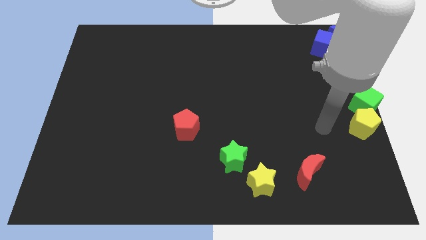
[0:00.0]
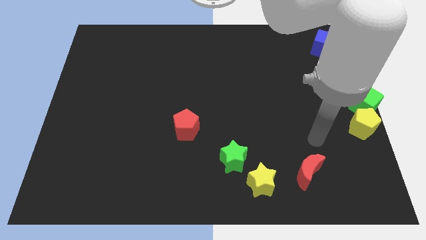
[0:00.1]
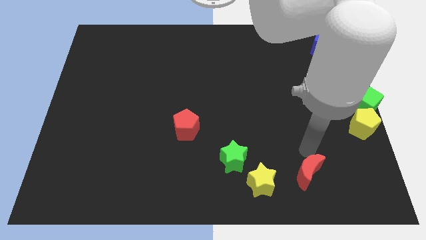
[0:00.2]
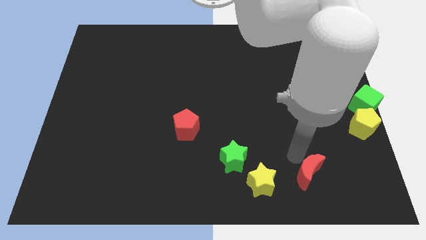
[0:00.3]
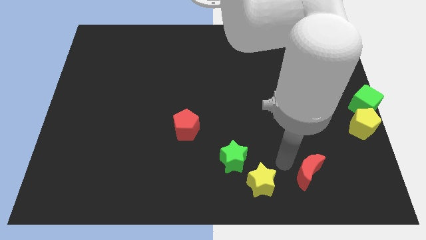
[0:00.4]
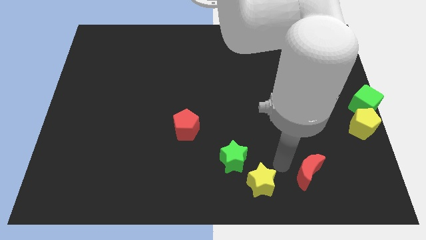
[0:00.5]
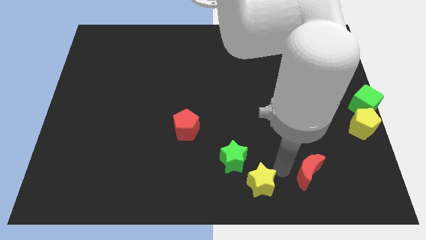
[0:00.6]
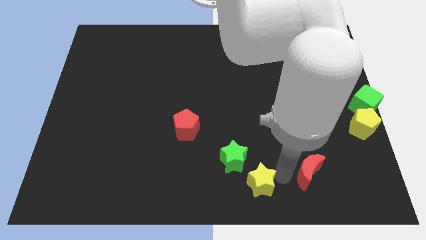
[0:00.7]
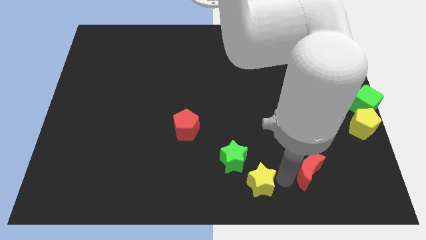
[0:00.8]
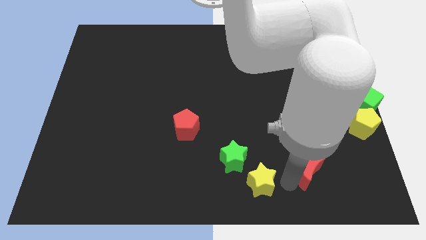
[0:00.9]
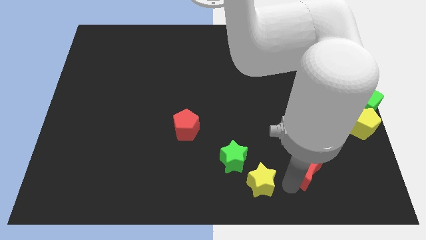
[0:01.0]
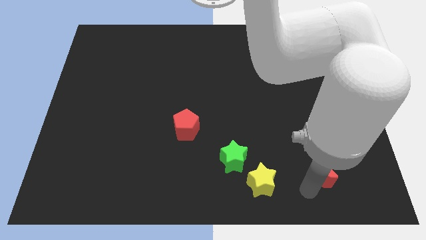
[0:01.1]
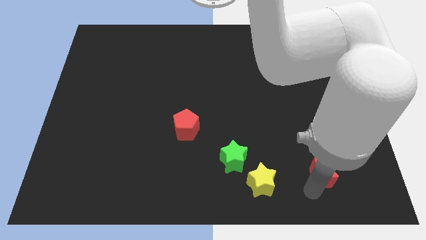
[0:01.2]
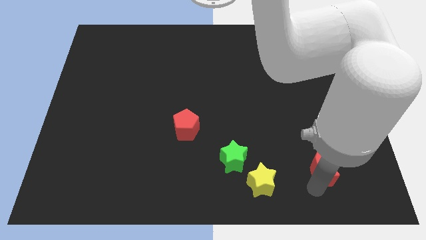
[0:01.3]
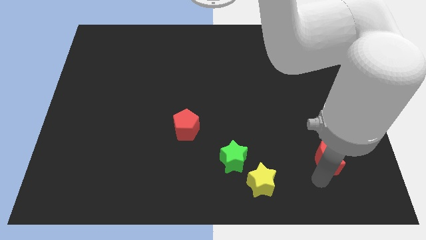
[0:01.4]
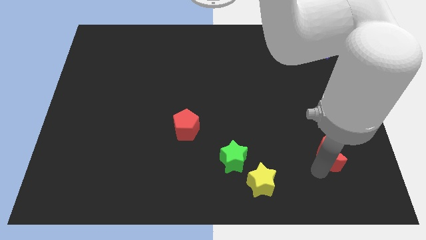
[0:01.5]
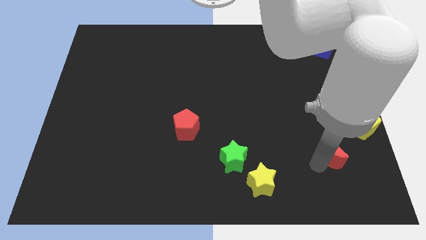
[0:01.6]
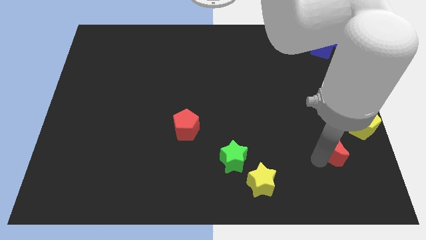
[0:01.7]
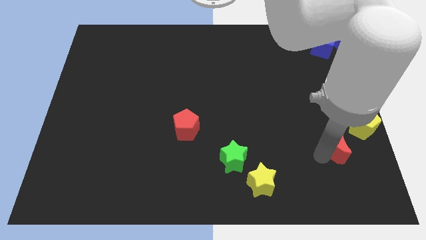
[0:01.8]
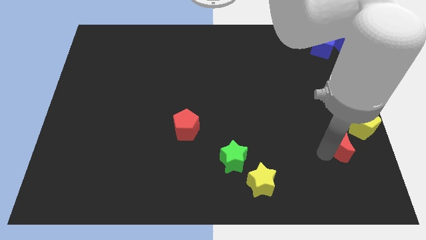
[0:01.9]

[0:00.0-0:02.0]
drag the red moon towards the yellow pentagon

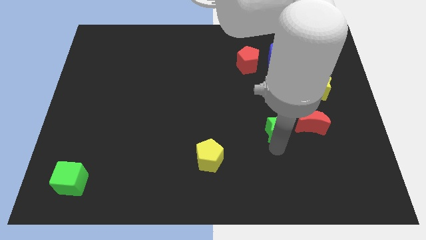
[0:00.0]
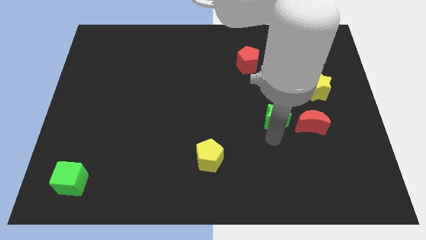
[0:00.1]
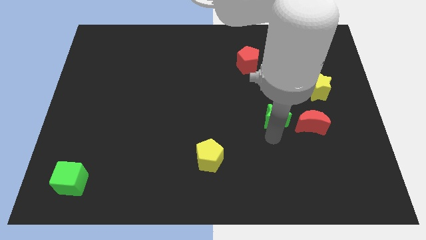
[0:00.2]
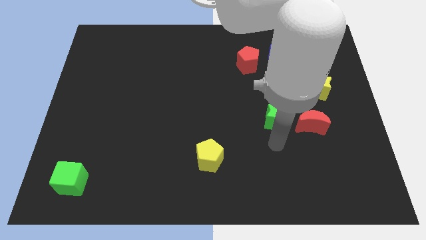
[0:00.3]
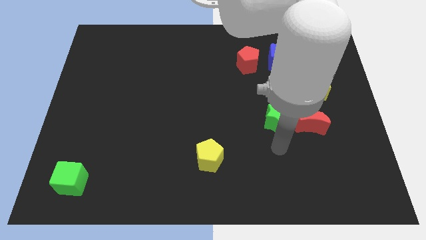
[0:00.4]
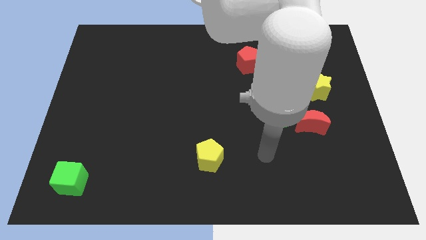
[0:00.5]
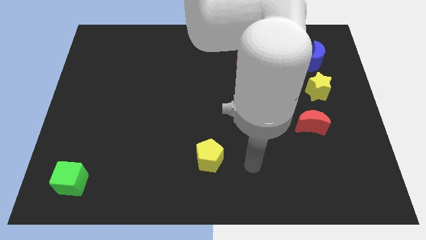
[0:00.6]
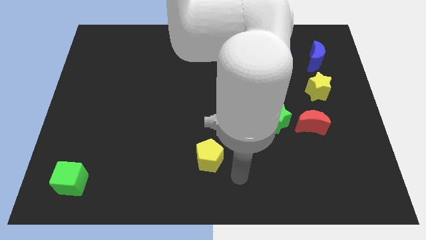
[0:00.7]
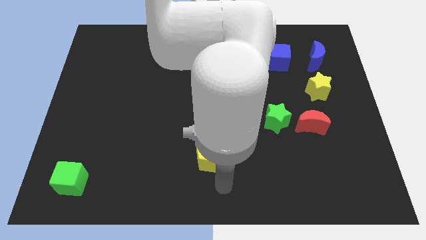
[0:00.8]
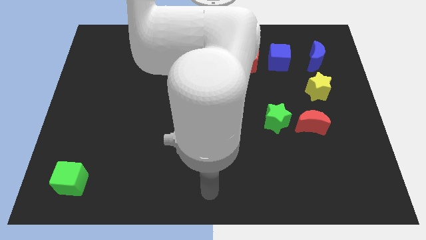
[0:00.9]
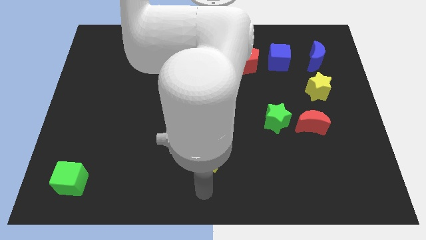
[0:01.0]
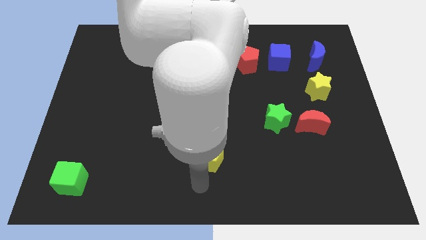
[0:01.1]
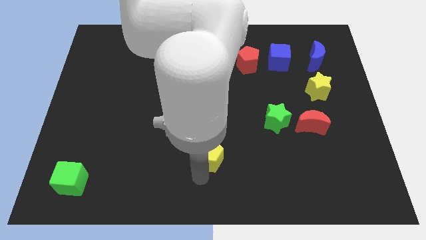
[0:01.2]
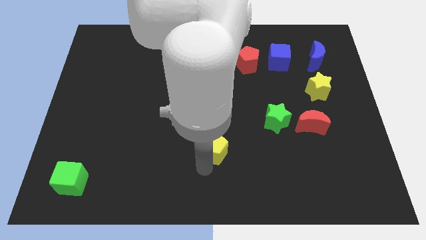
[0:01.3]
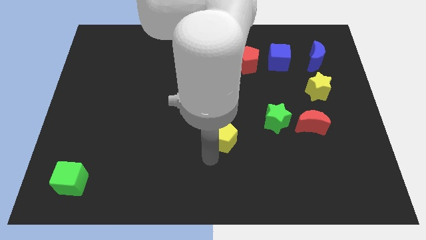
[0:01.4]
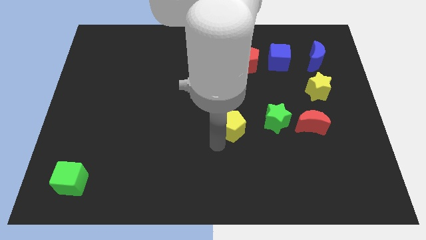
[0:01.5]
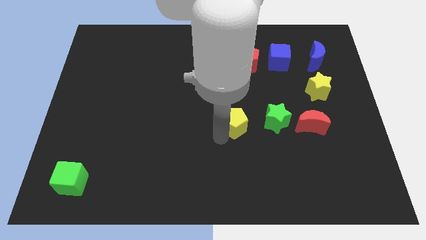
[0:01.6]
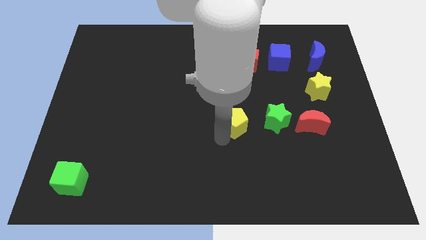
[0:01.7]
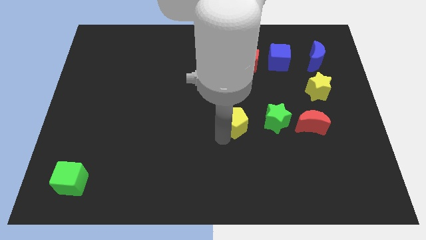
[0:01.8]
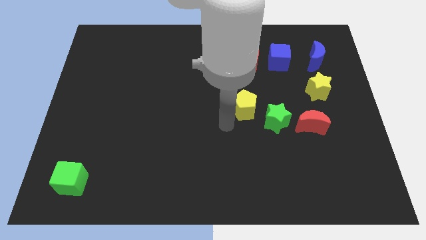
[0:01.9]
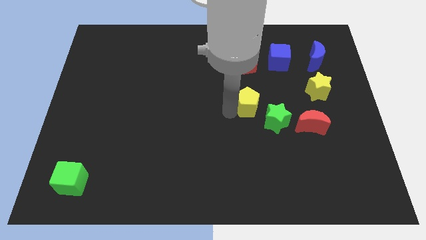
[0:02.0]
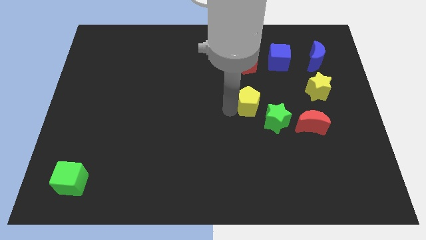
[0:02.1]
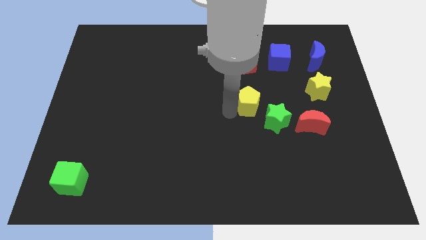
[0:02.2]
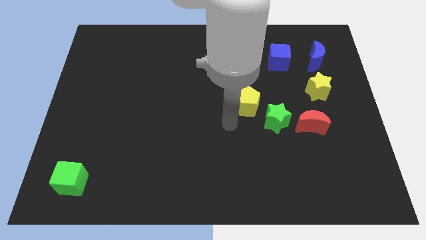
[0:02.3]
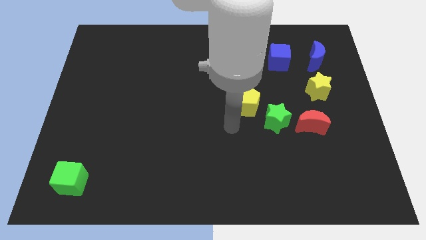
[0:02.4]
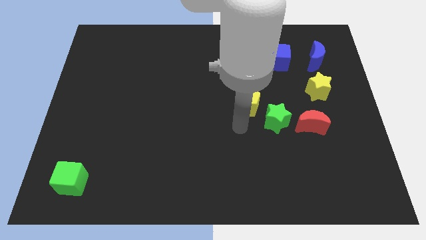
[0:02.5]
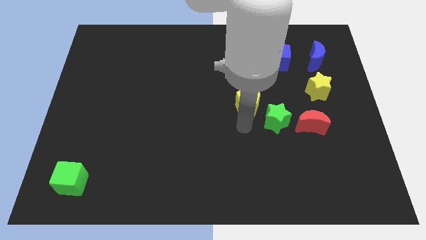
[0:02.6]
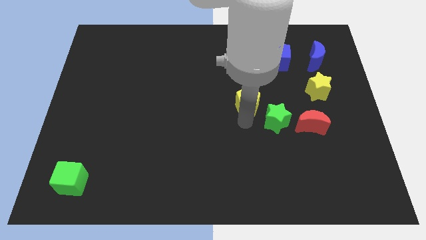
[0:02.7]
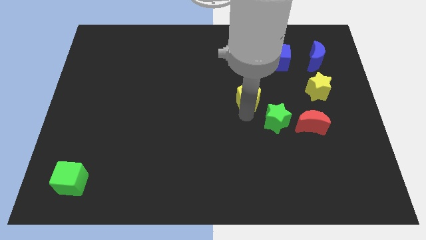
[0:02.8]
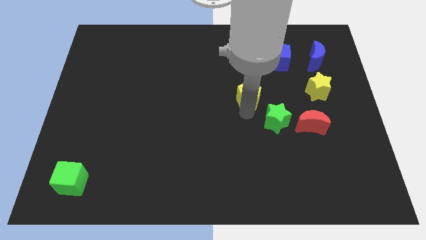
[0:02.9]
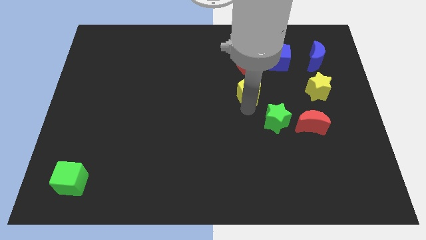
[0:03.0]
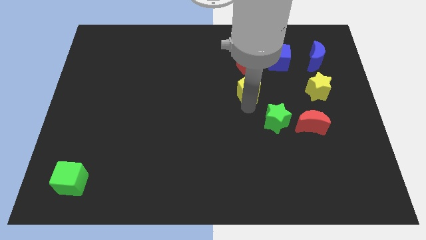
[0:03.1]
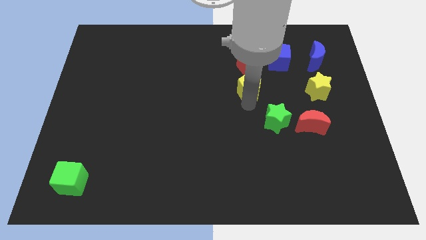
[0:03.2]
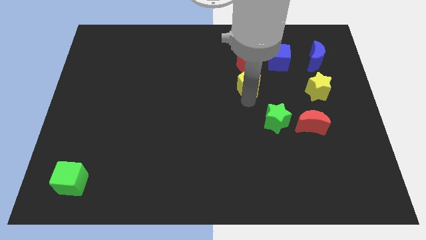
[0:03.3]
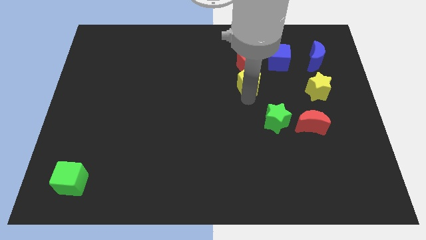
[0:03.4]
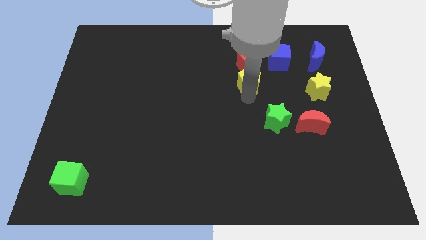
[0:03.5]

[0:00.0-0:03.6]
place the yellow pnetagon diagonal to the green star

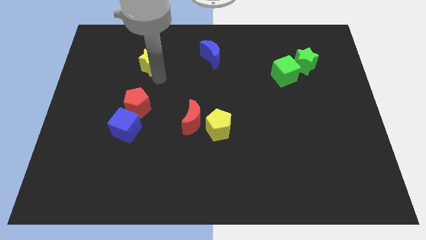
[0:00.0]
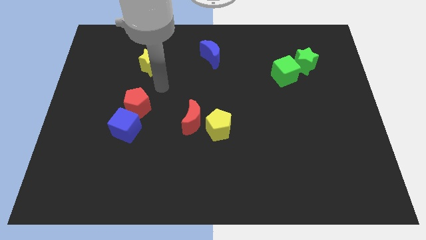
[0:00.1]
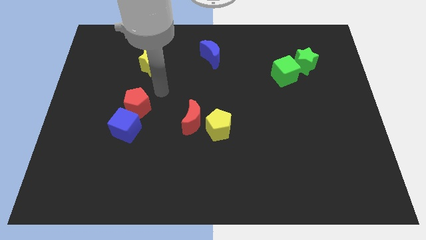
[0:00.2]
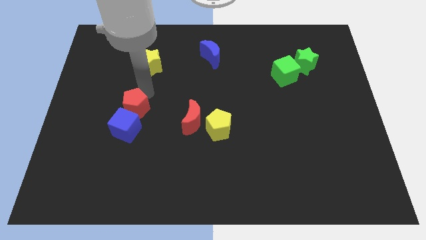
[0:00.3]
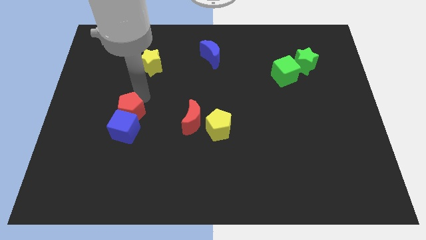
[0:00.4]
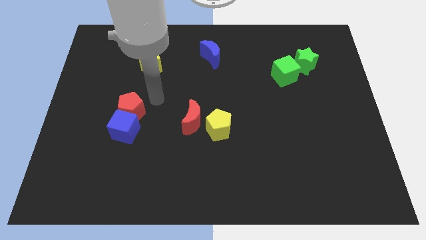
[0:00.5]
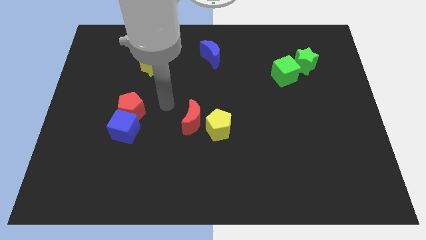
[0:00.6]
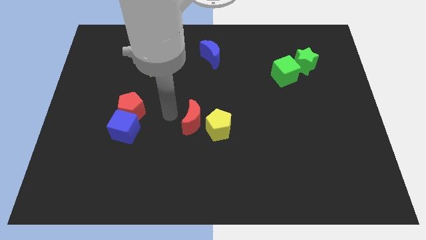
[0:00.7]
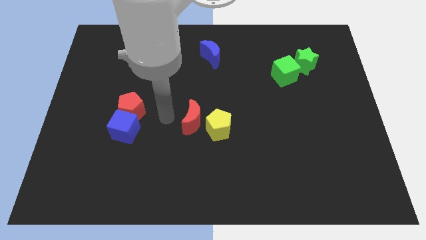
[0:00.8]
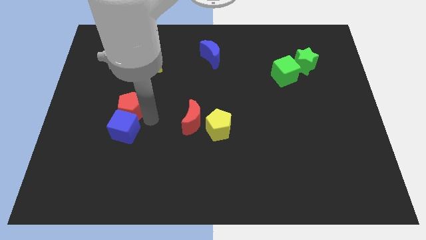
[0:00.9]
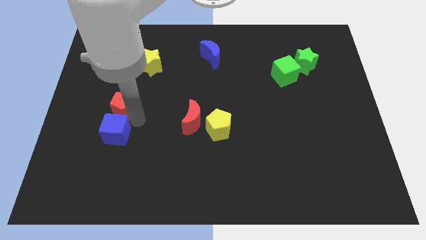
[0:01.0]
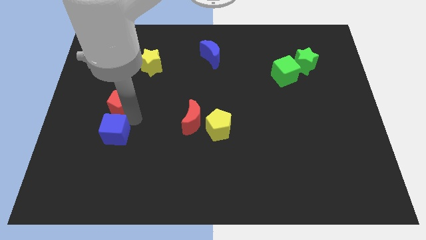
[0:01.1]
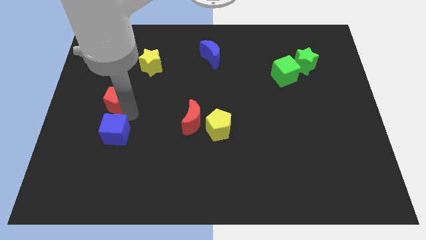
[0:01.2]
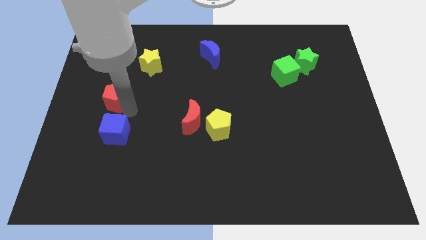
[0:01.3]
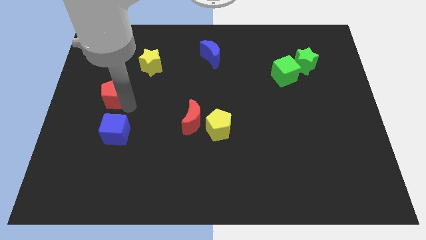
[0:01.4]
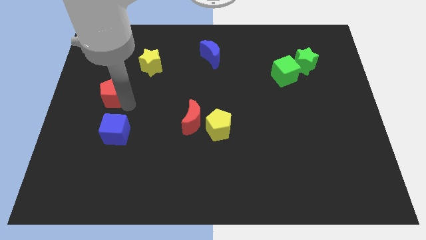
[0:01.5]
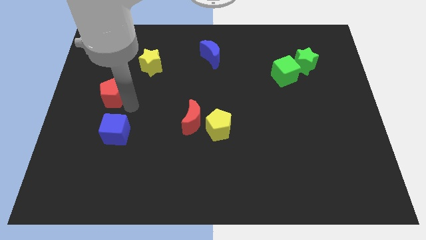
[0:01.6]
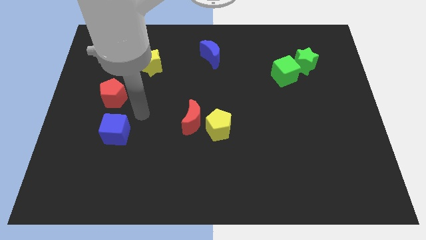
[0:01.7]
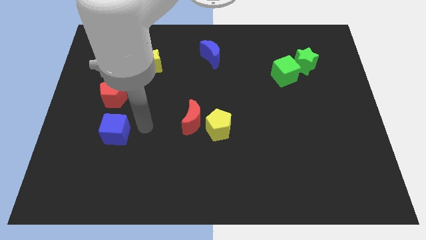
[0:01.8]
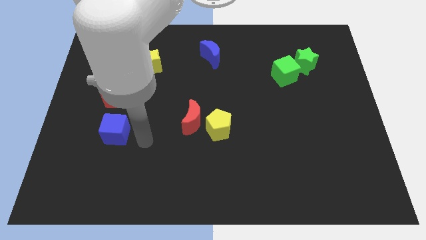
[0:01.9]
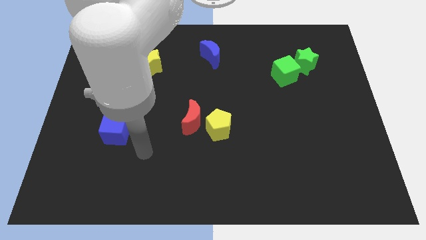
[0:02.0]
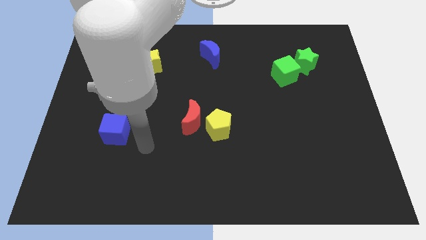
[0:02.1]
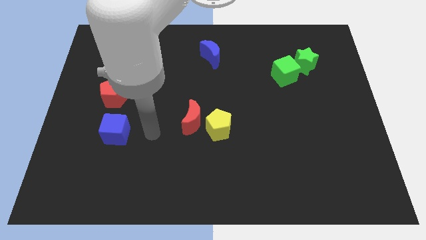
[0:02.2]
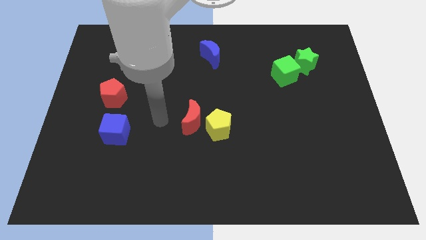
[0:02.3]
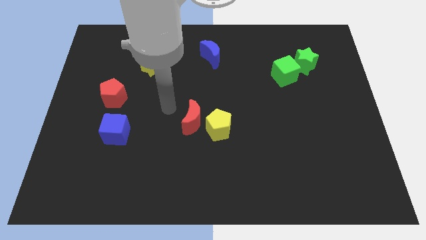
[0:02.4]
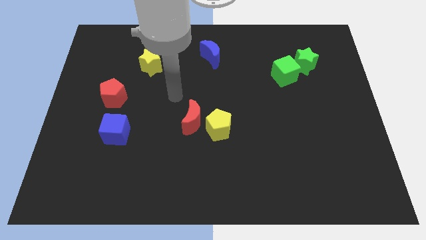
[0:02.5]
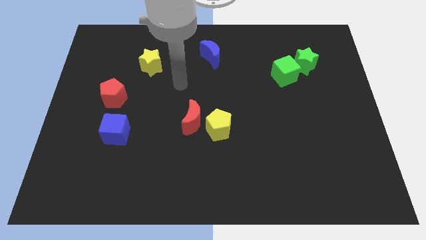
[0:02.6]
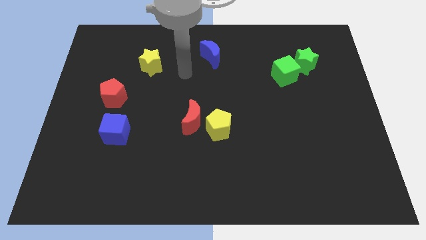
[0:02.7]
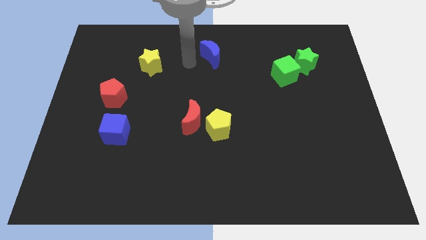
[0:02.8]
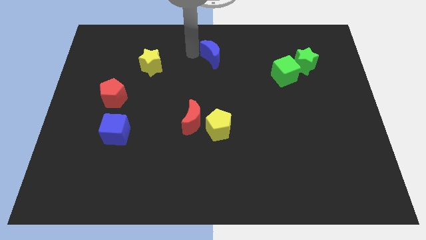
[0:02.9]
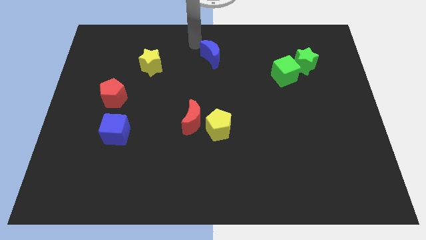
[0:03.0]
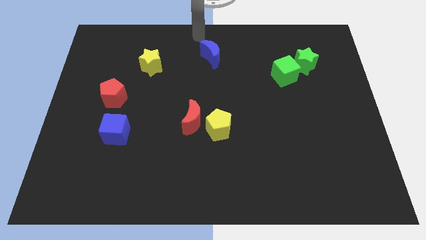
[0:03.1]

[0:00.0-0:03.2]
slightly move the red pentagon away from the blue cube
